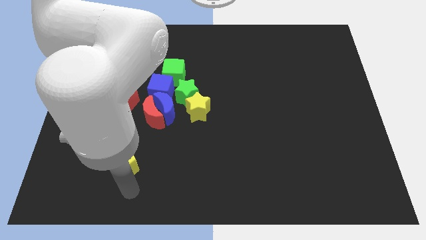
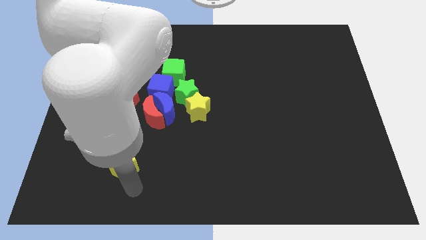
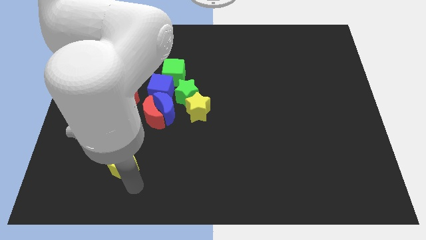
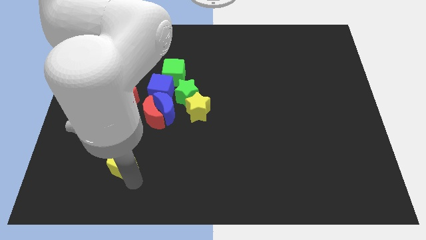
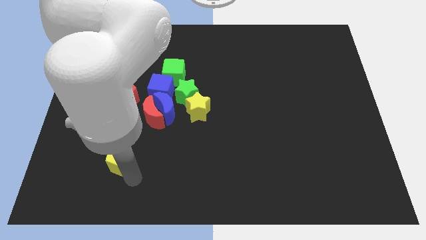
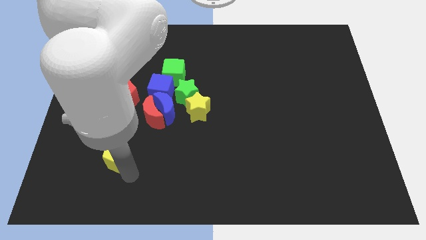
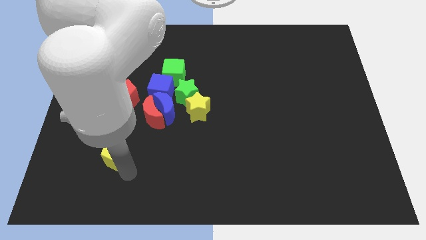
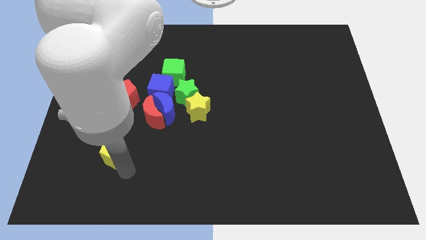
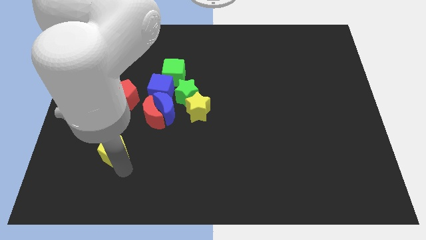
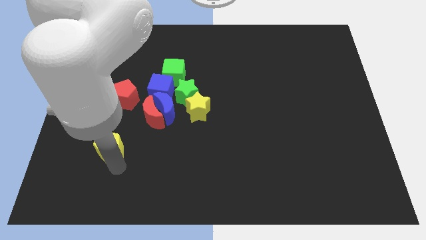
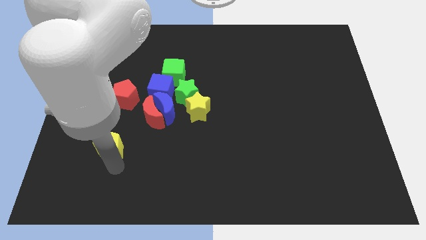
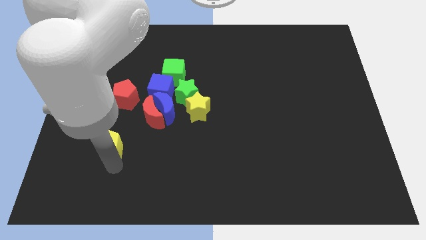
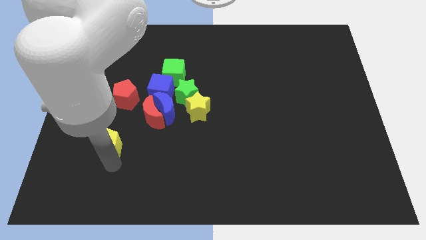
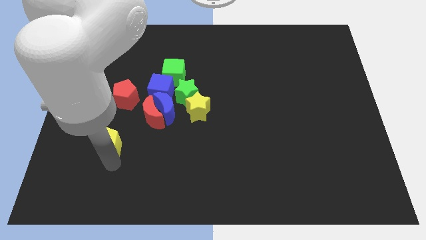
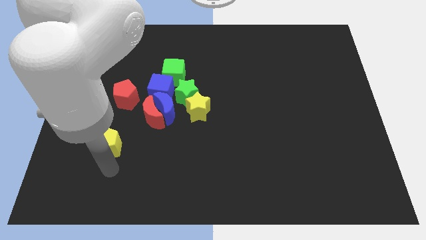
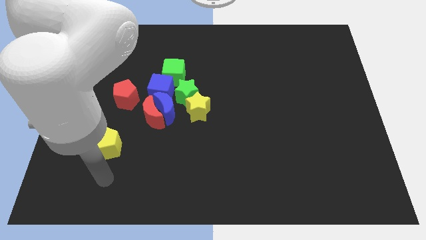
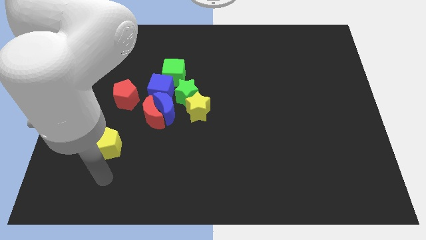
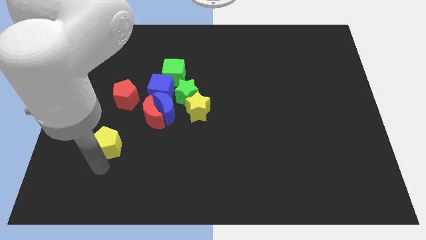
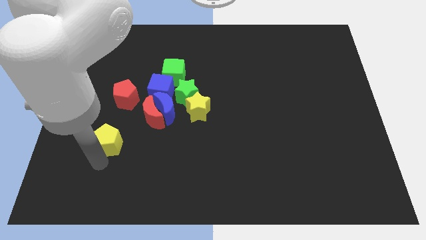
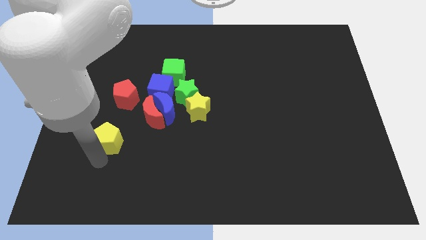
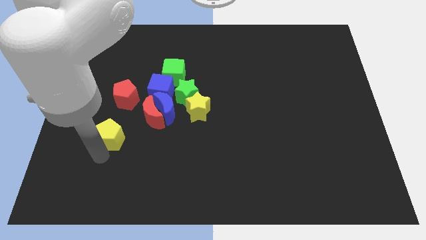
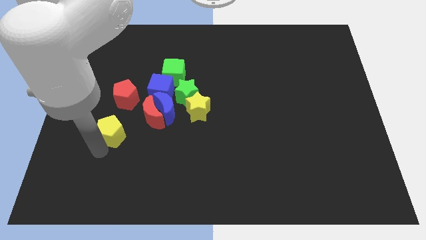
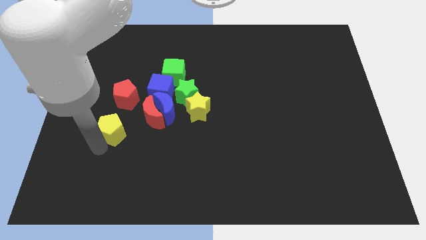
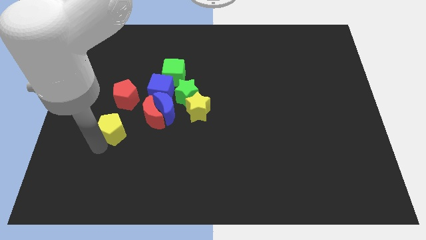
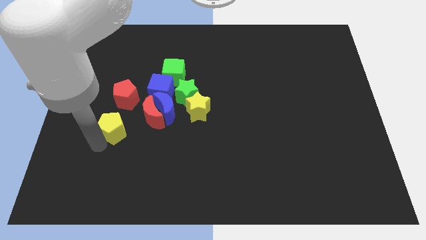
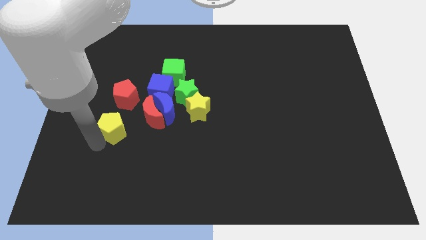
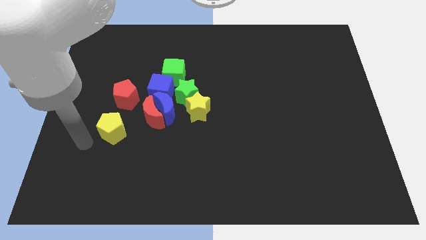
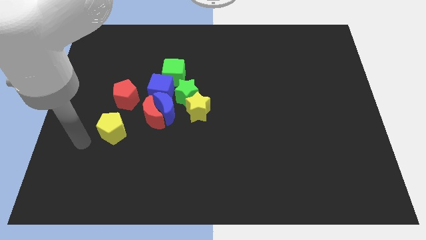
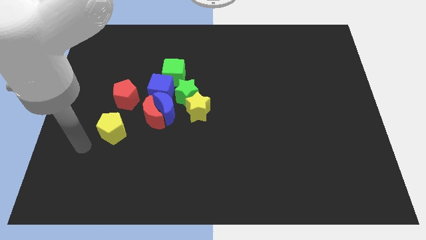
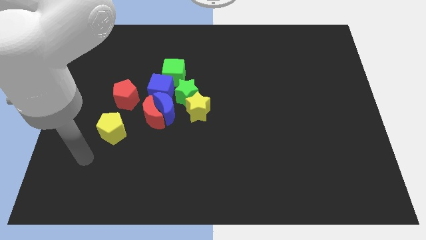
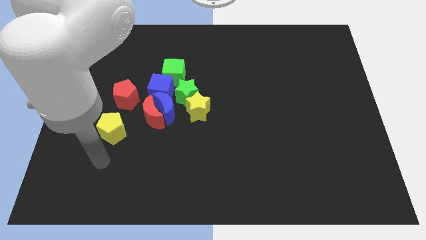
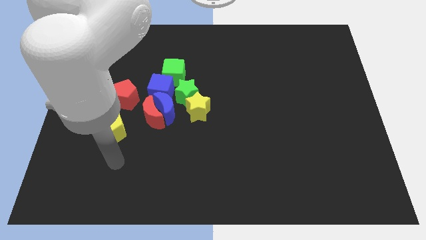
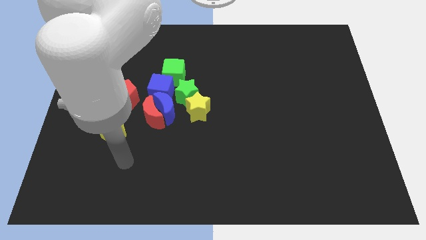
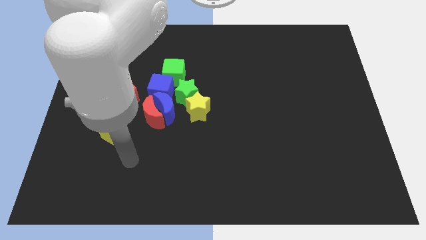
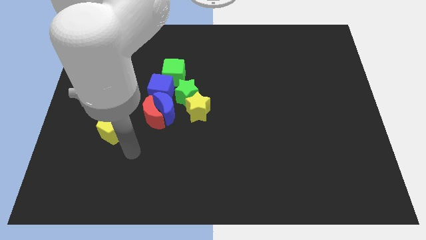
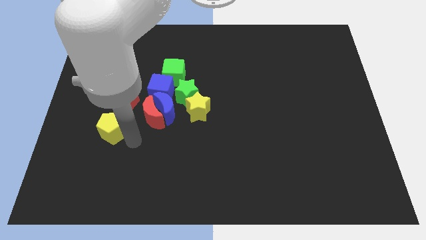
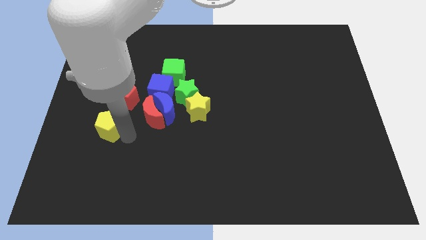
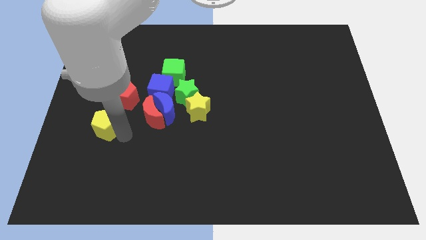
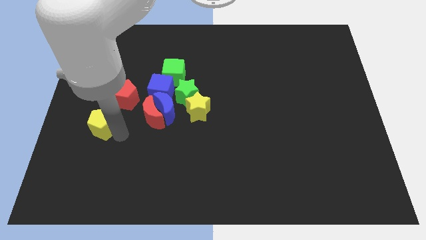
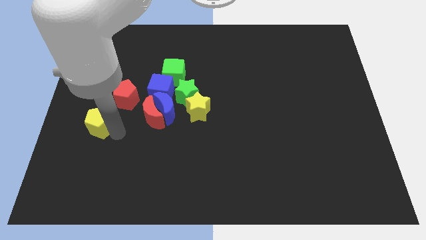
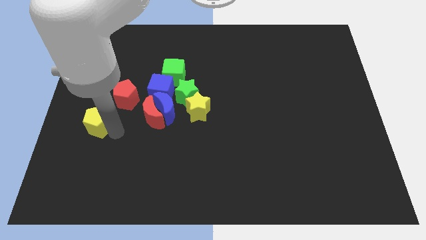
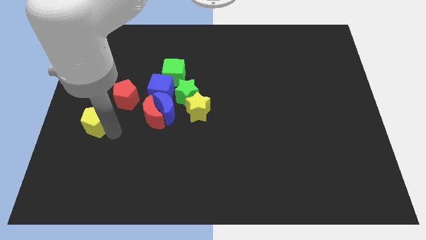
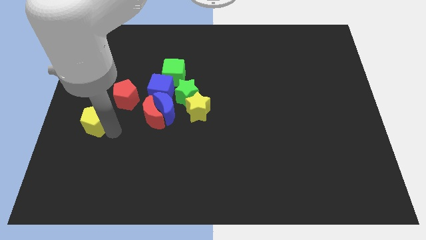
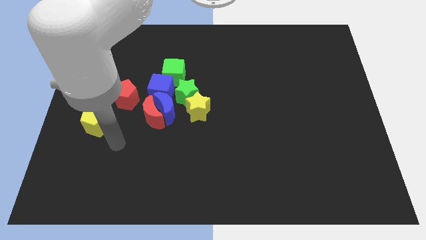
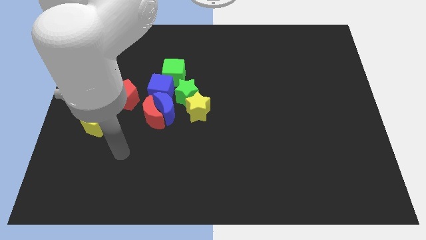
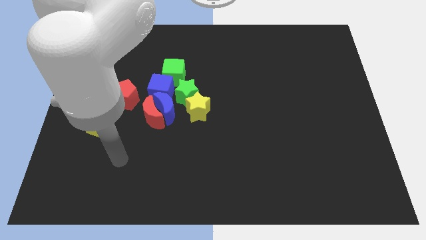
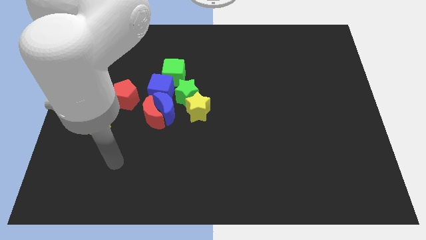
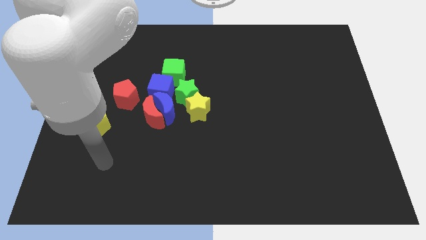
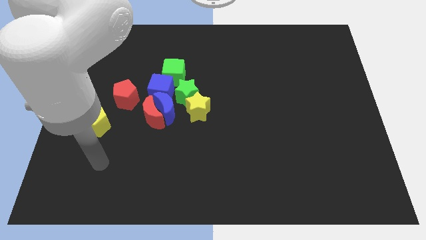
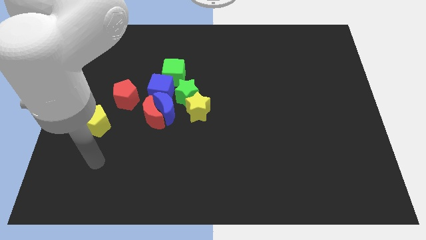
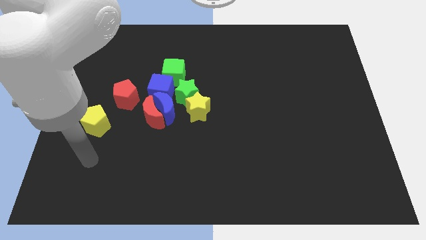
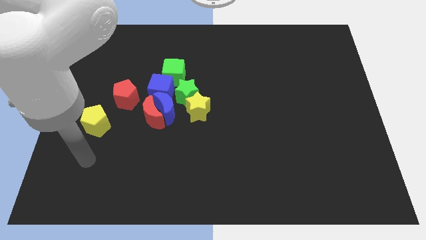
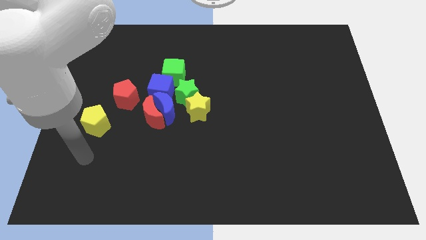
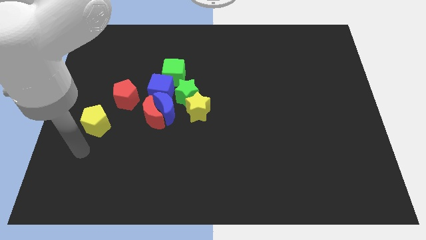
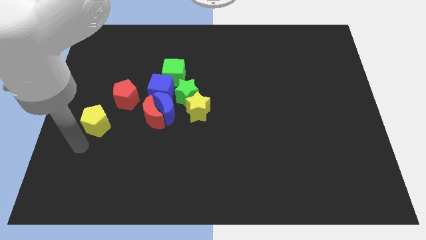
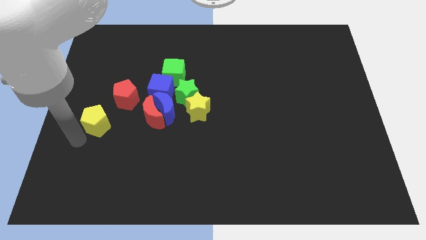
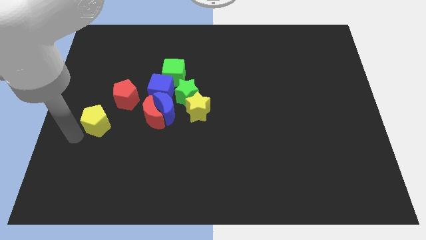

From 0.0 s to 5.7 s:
move the yellow pentagon diagonally below the red pentagon

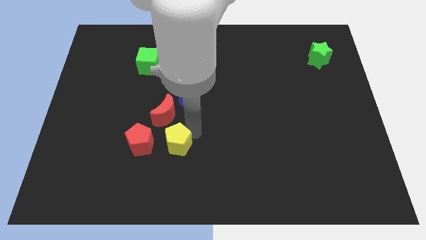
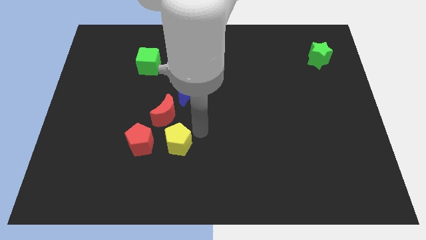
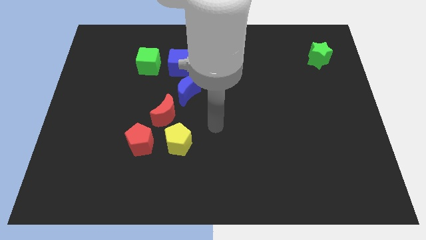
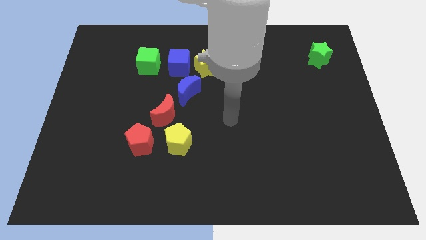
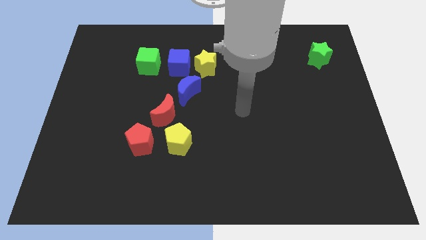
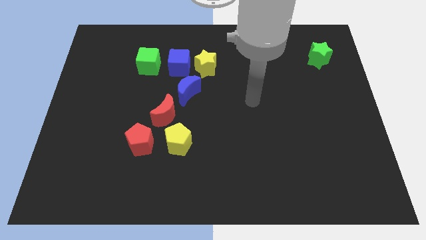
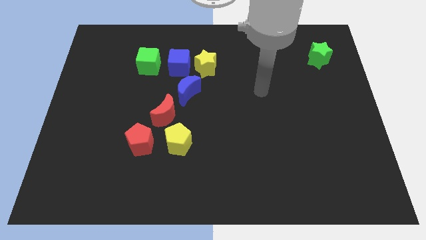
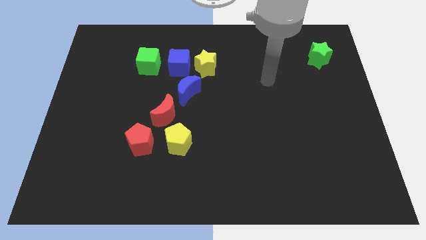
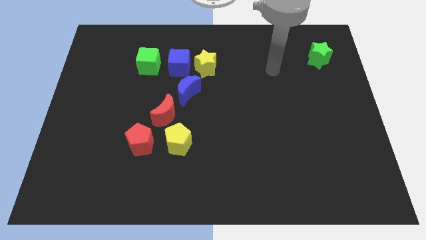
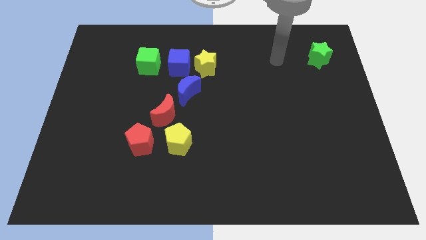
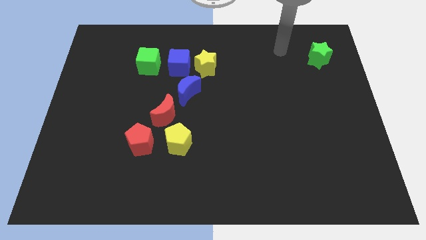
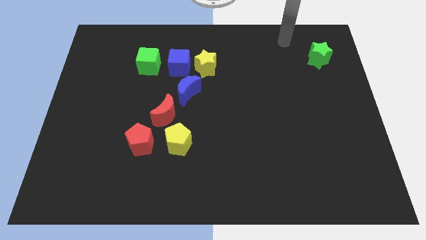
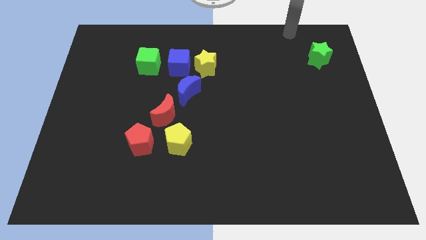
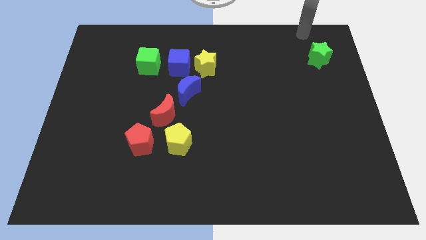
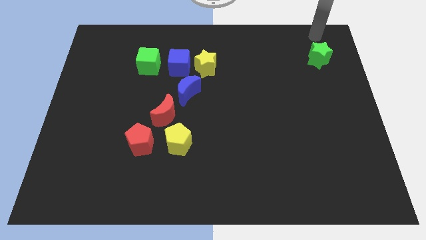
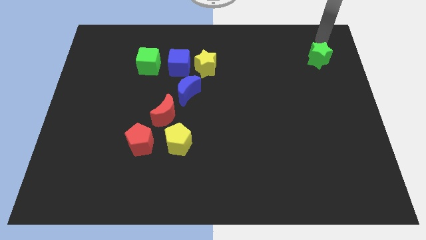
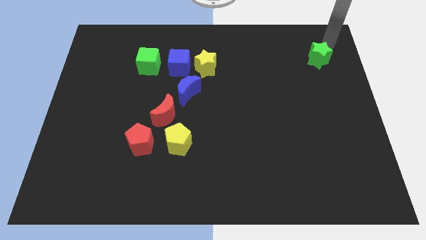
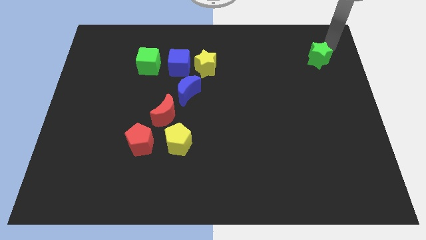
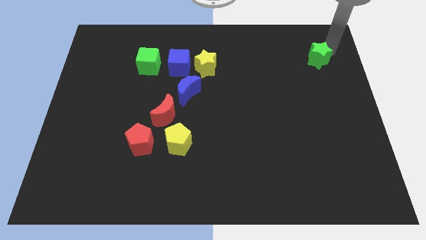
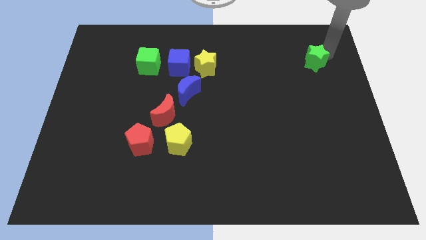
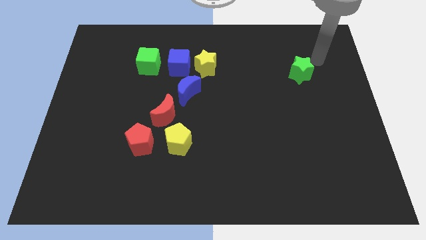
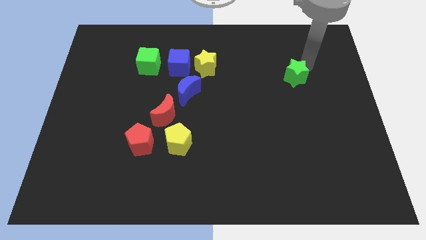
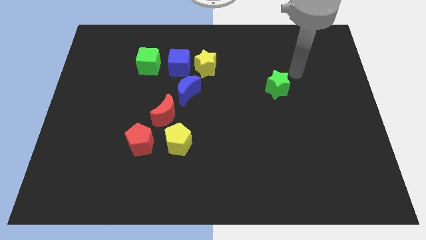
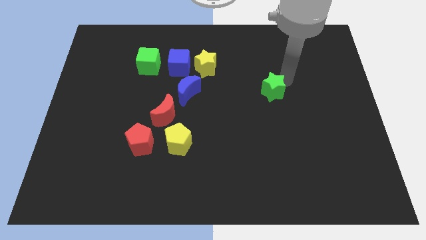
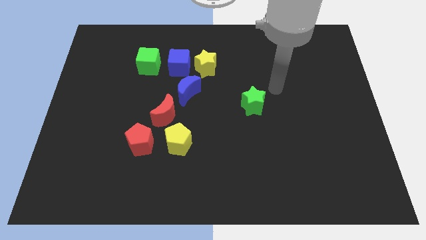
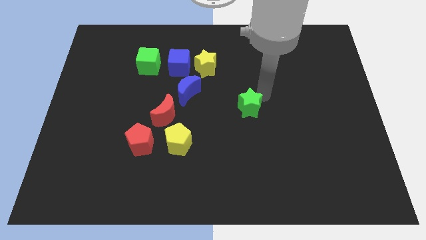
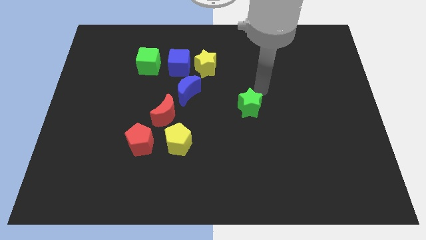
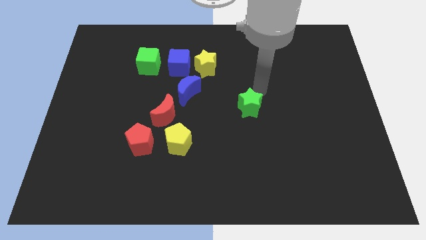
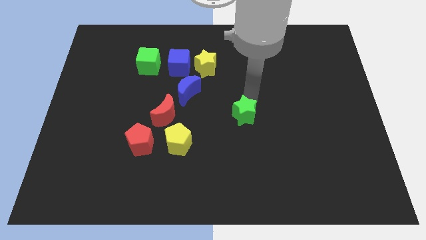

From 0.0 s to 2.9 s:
place the green star diagonally to yellow pentagon

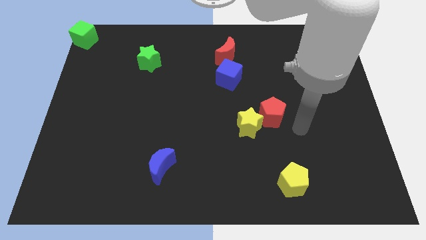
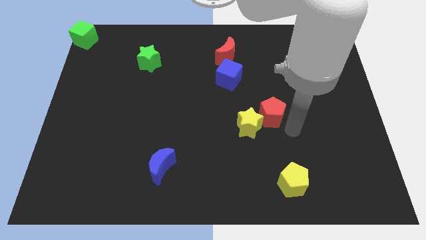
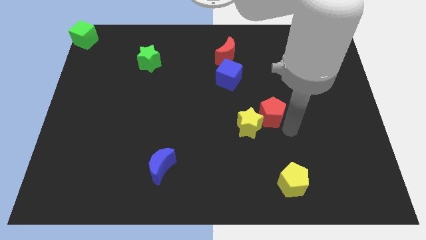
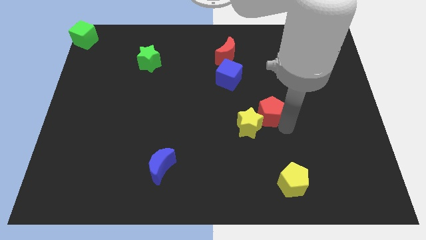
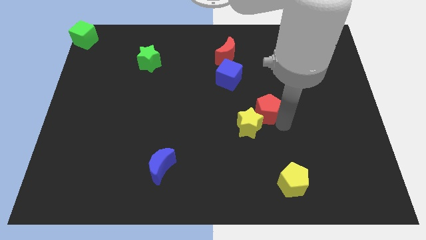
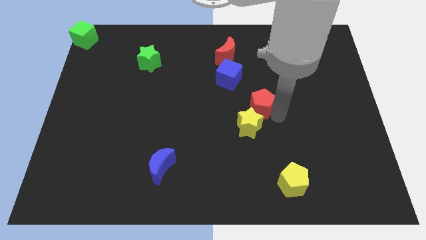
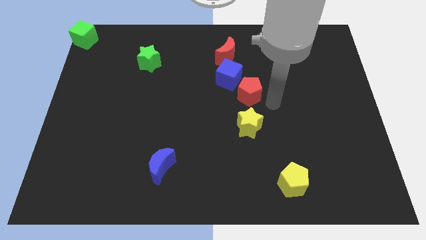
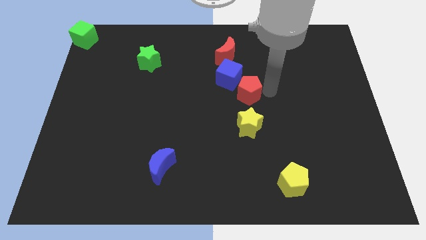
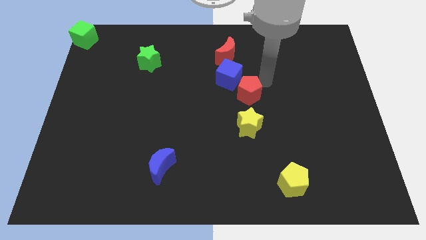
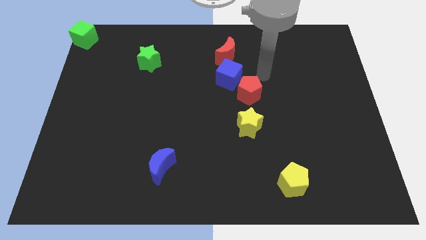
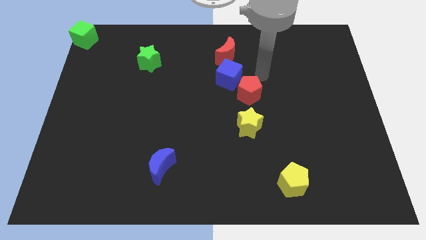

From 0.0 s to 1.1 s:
move red pentagon into blue cube
